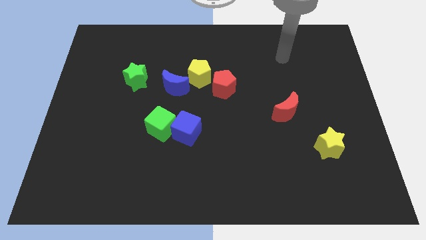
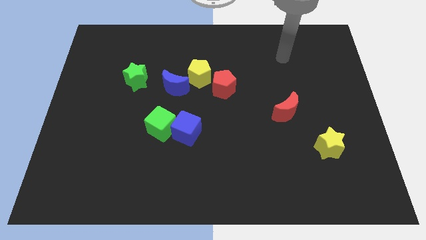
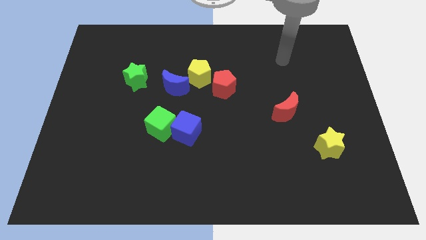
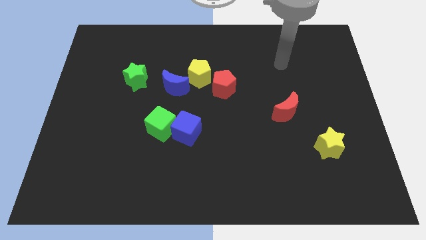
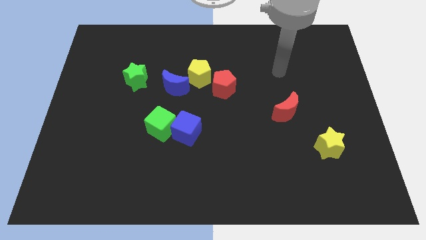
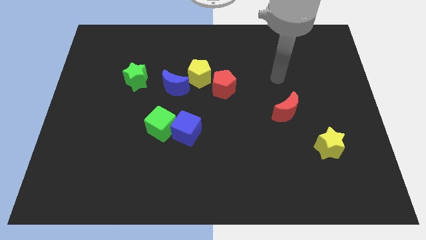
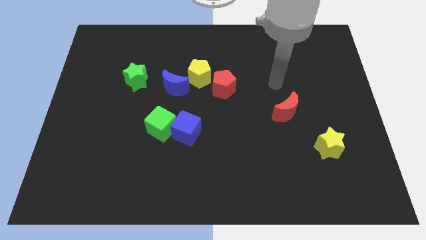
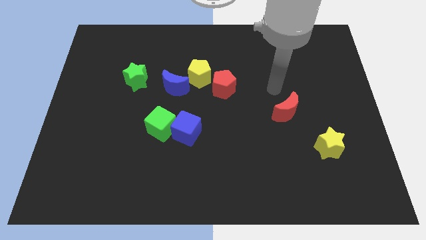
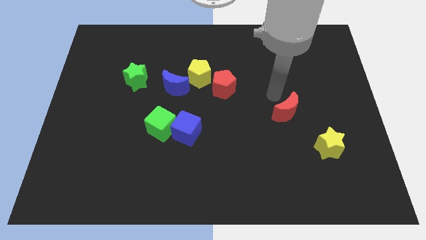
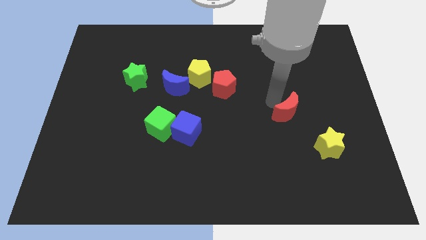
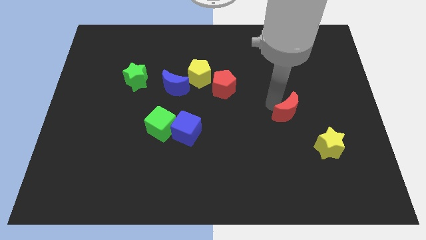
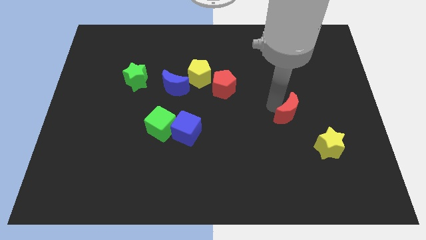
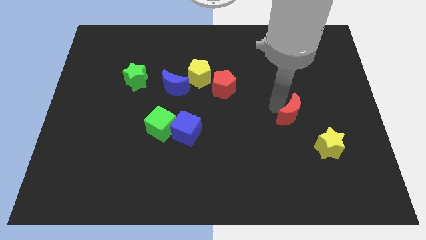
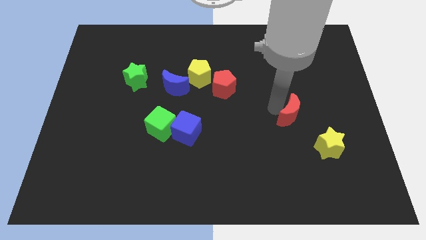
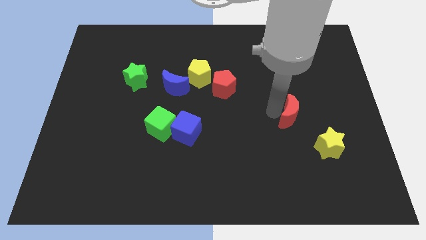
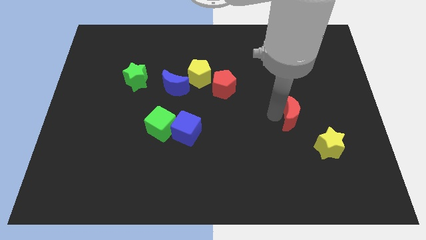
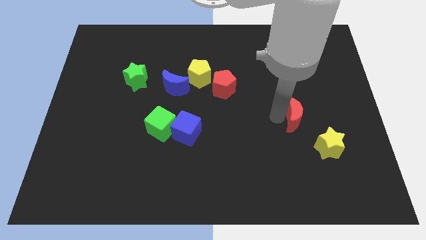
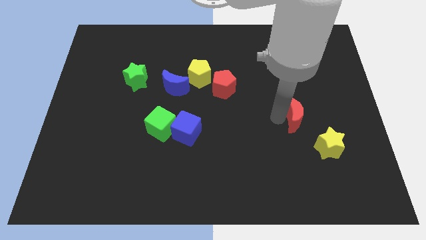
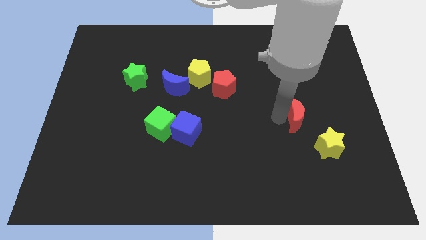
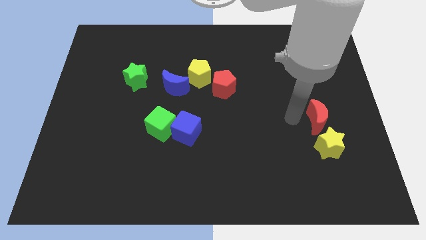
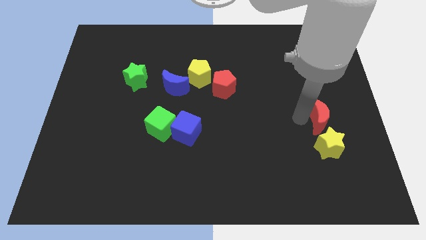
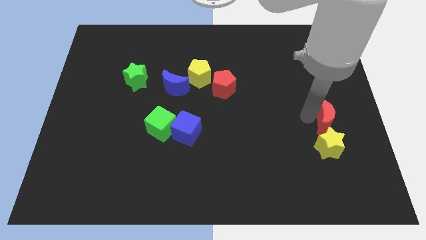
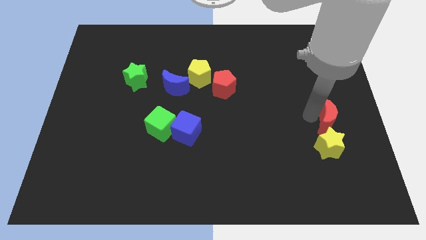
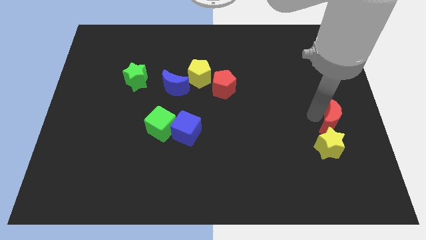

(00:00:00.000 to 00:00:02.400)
place the red crescent above the yellow star

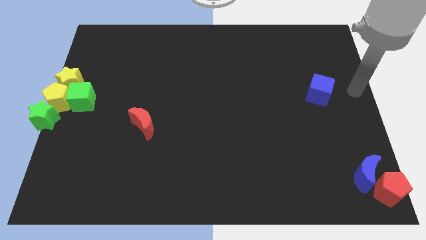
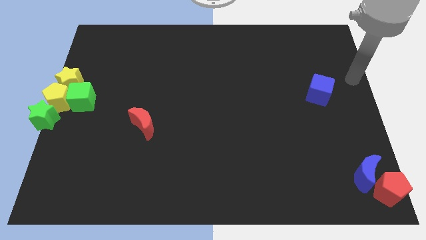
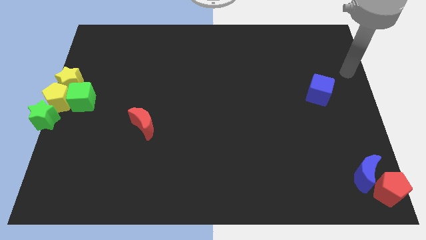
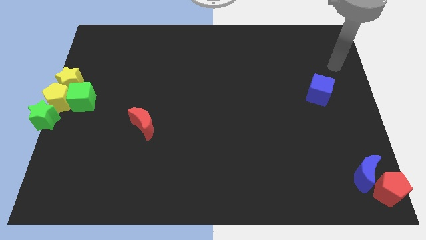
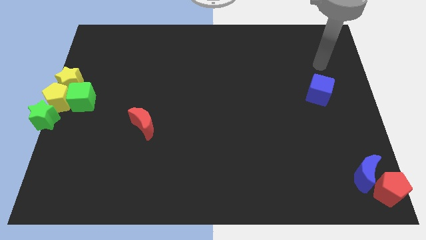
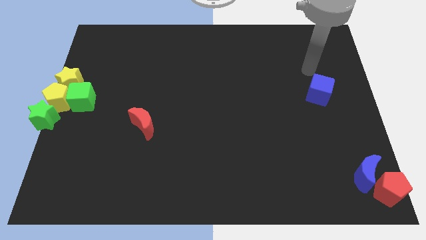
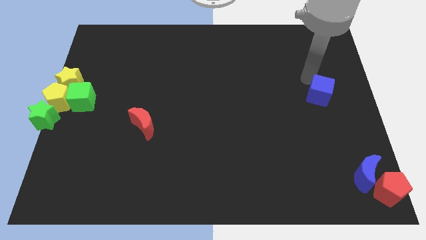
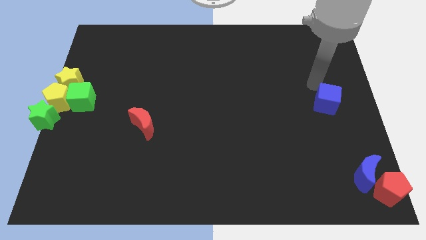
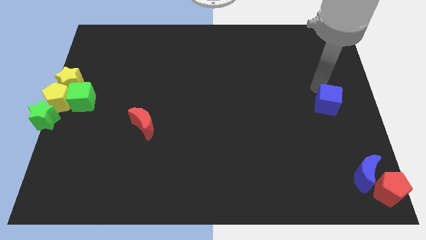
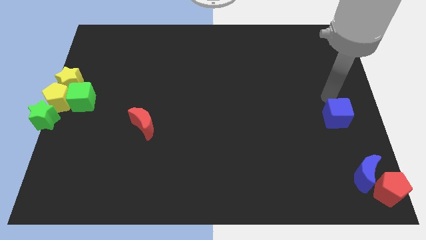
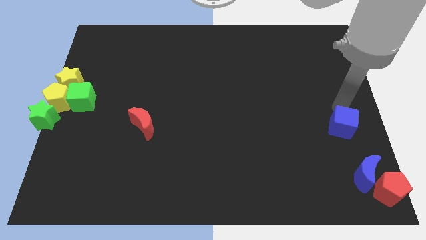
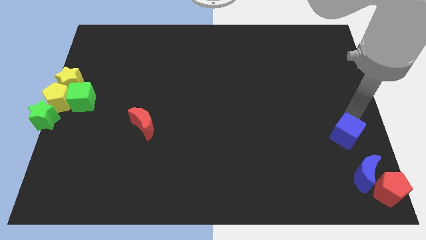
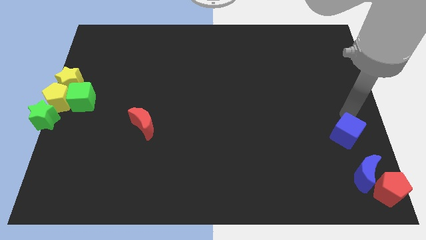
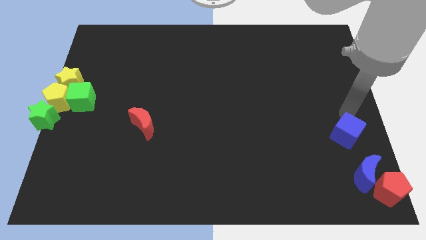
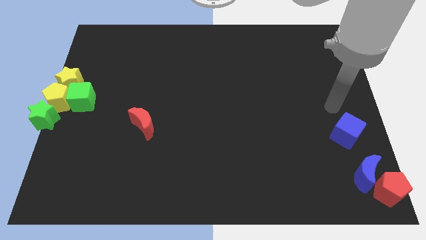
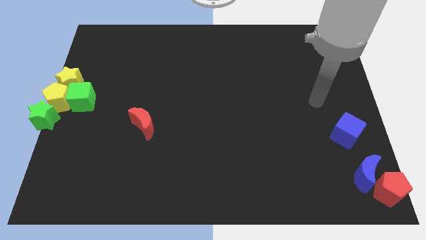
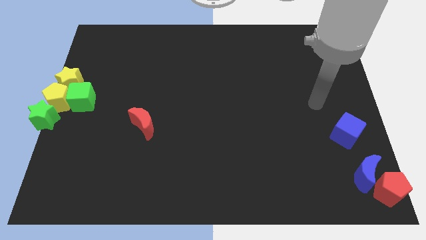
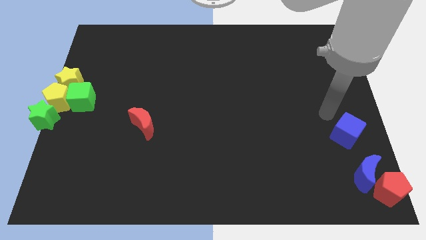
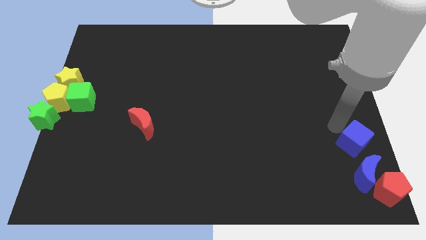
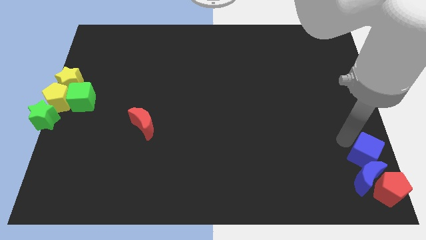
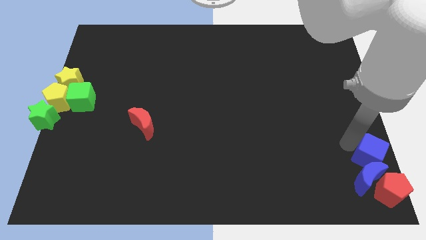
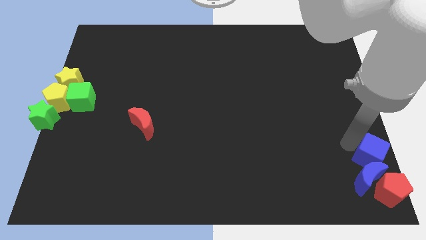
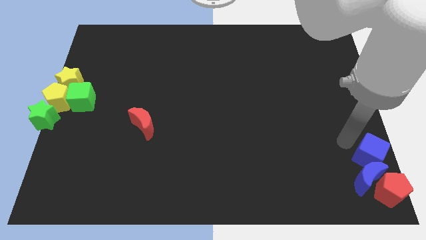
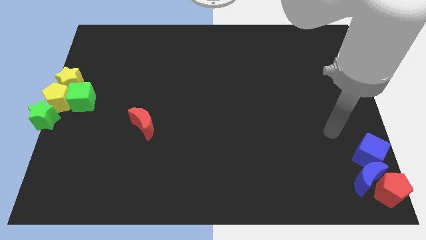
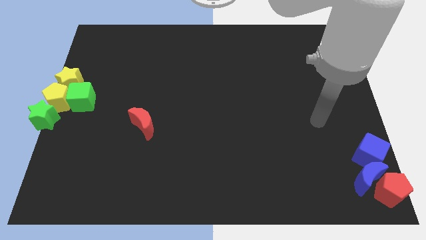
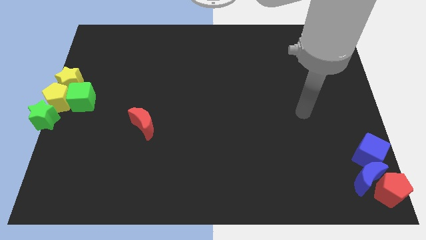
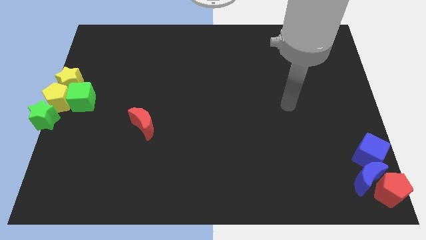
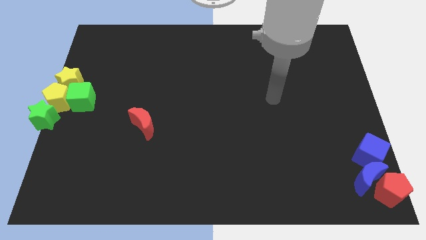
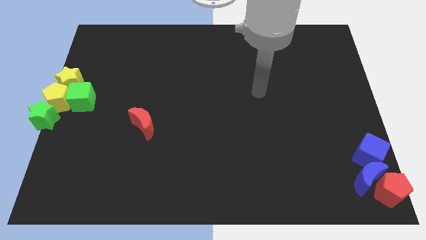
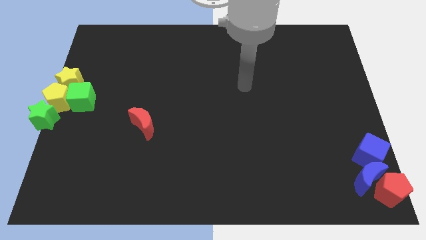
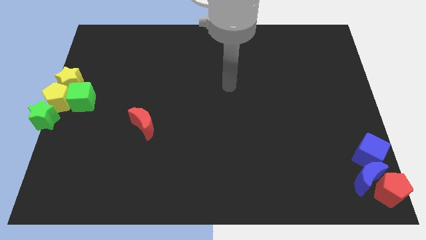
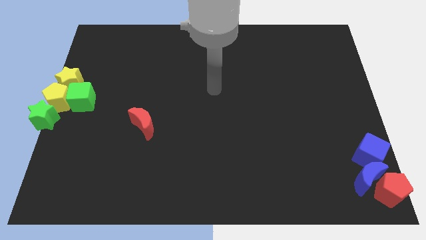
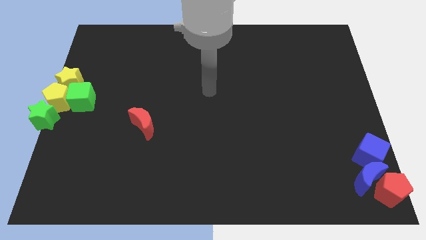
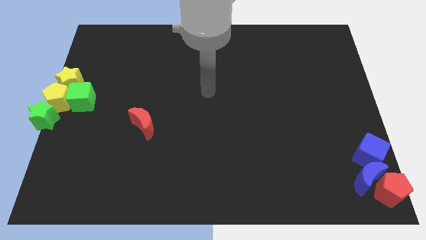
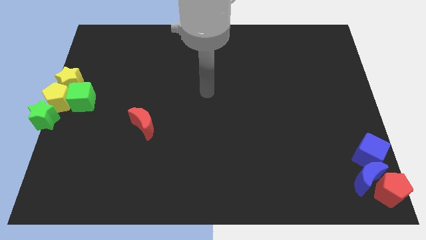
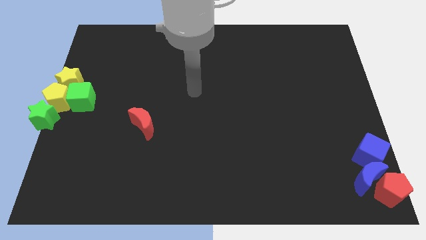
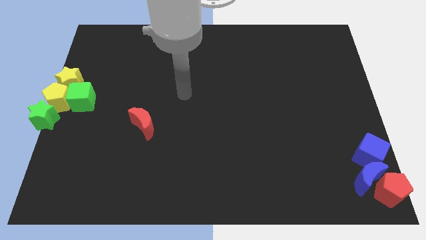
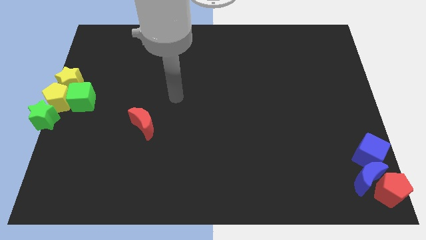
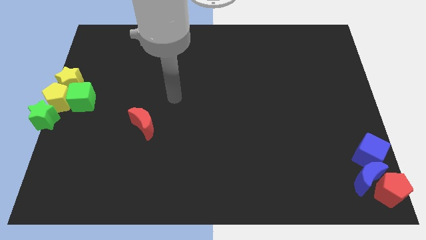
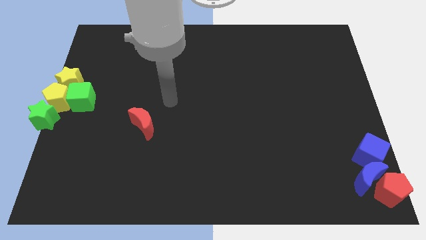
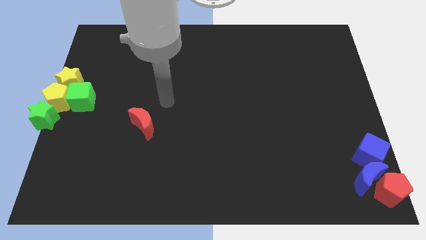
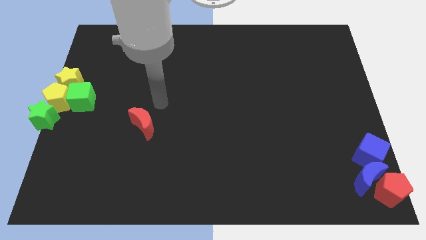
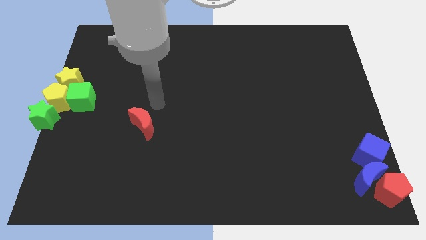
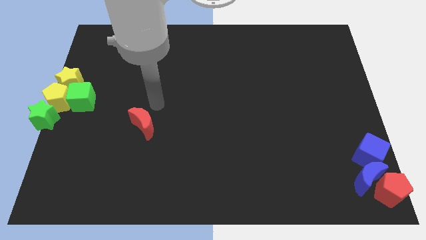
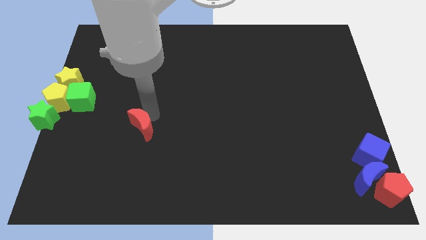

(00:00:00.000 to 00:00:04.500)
push the blue cube into the blue crescent

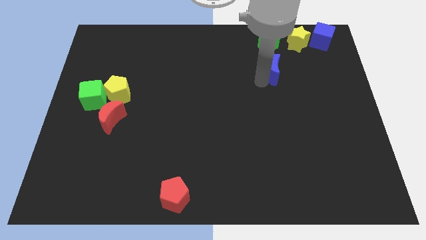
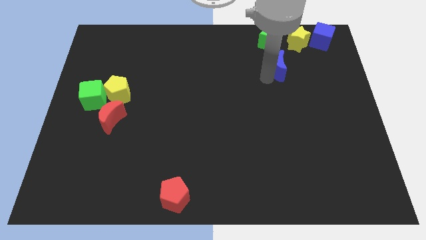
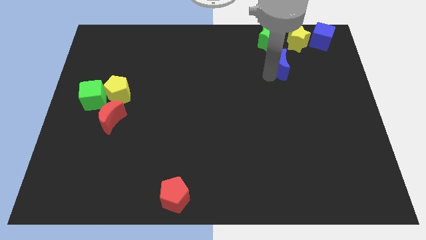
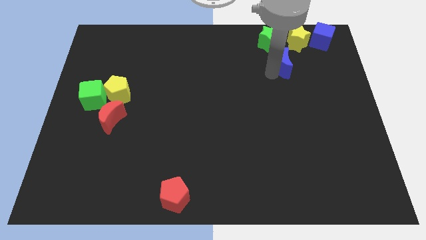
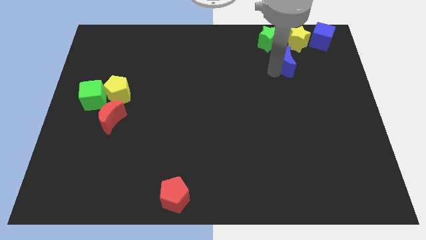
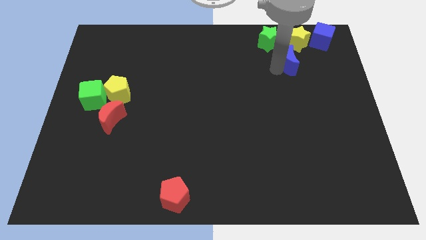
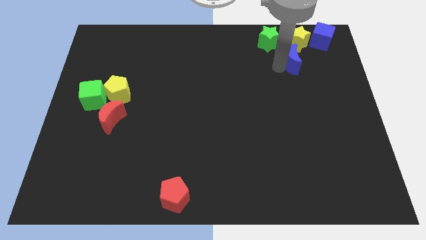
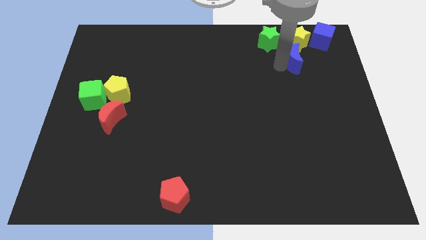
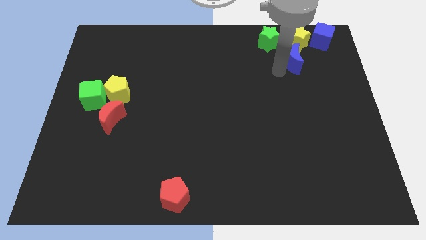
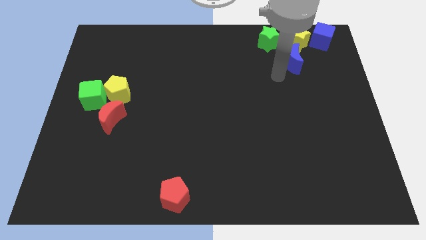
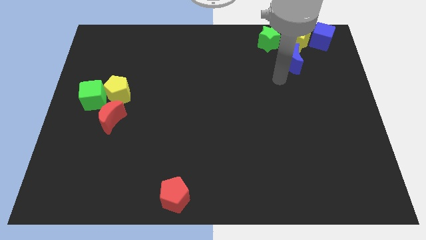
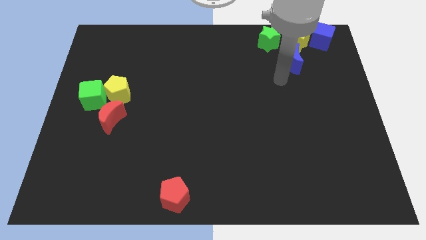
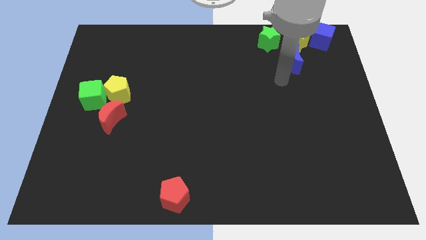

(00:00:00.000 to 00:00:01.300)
push blue crescent below yellow star

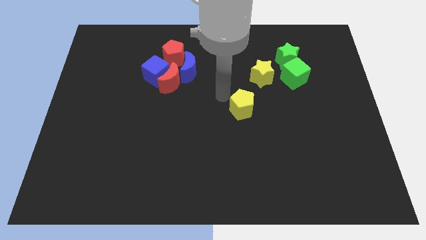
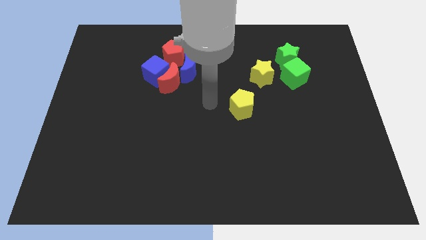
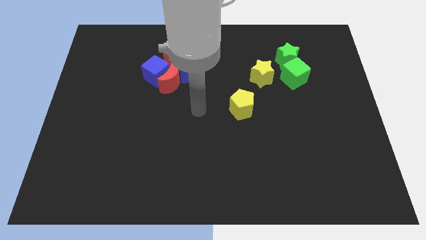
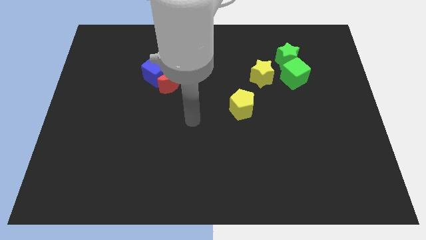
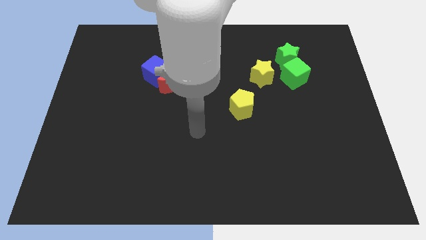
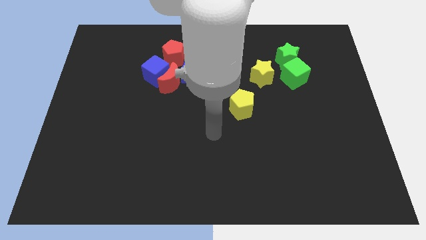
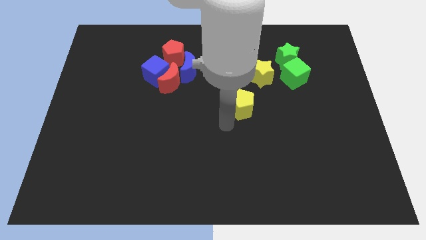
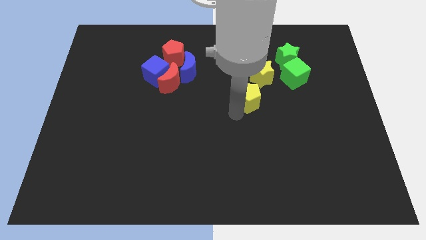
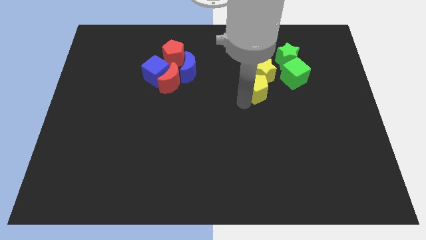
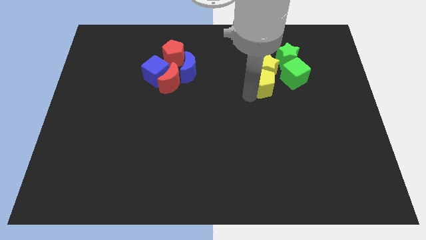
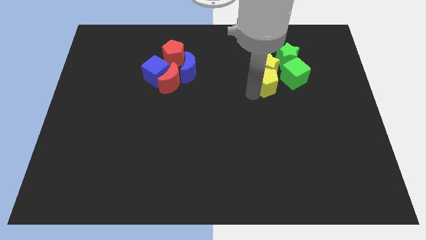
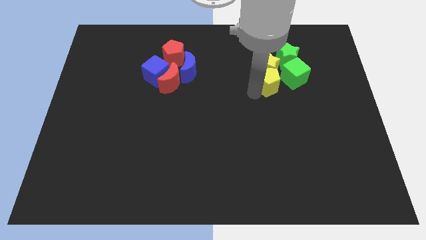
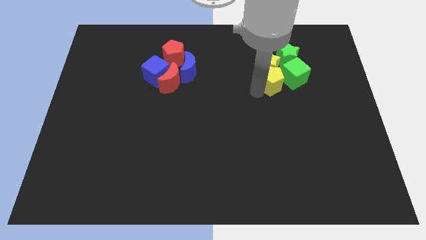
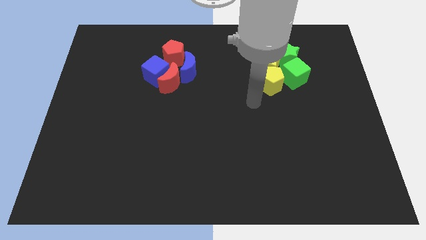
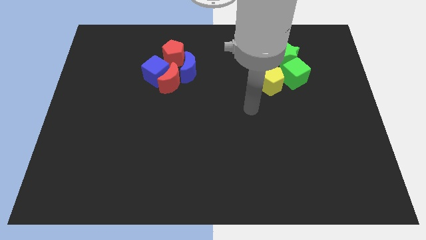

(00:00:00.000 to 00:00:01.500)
put the yellow pentagon left to the green cube
